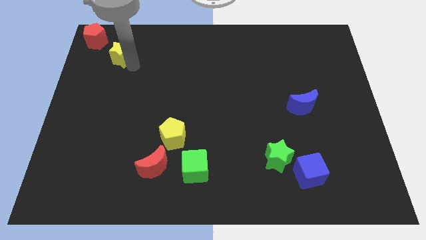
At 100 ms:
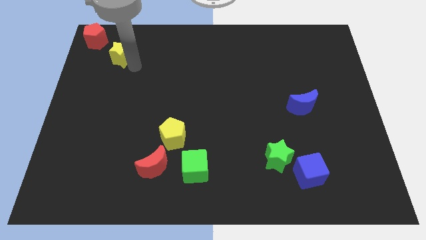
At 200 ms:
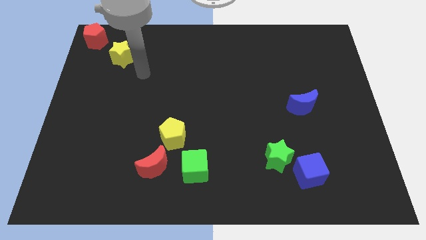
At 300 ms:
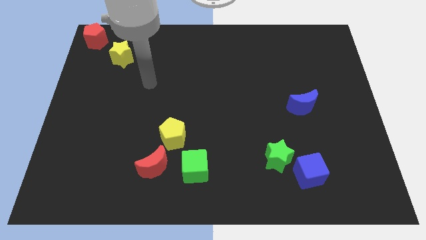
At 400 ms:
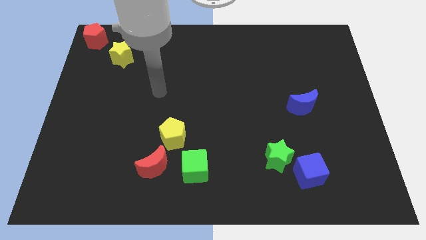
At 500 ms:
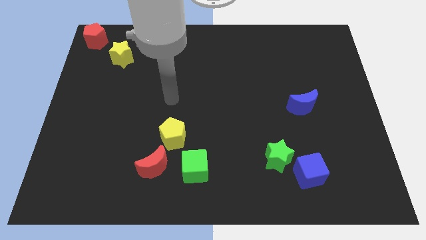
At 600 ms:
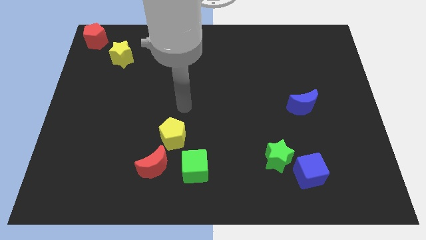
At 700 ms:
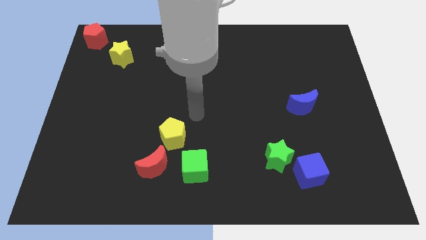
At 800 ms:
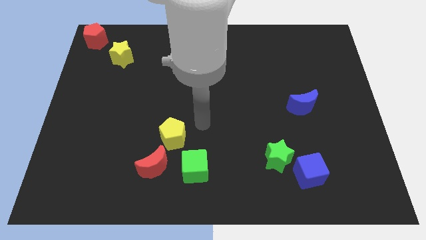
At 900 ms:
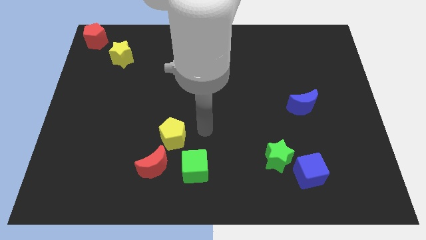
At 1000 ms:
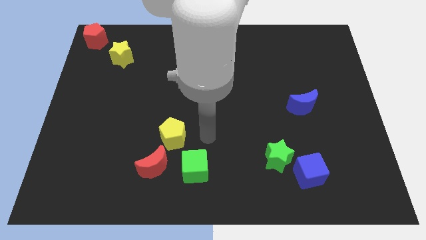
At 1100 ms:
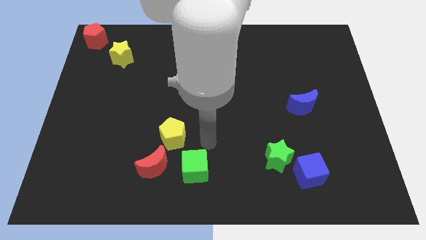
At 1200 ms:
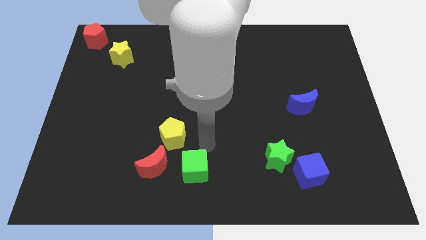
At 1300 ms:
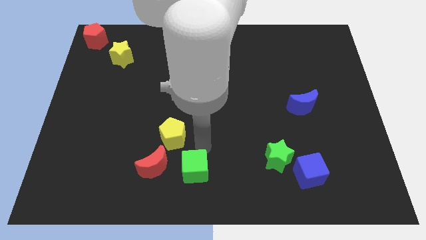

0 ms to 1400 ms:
move the arm away from the yellow star

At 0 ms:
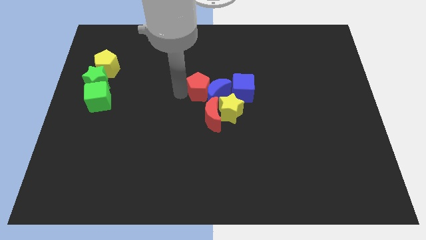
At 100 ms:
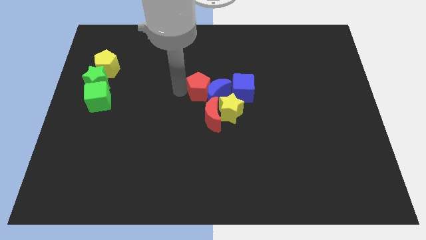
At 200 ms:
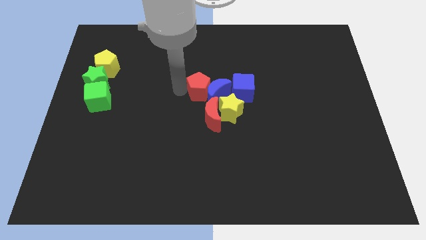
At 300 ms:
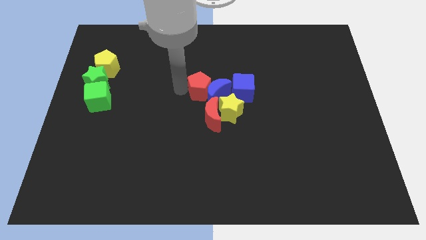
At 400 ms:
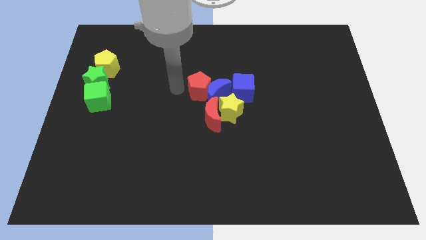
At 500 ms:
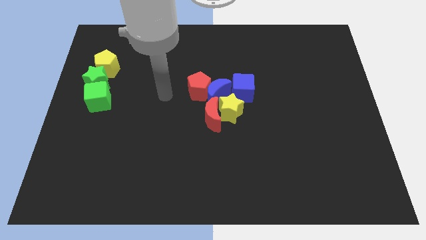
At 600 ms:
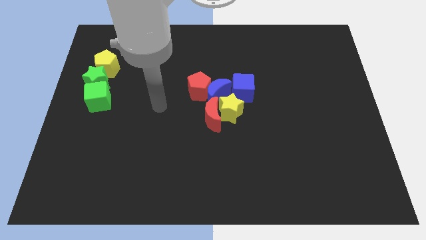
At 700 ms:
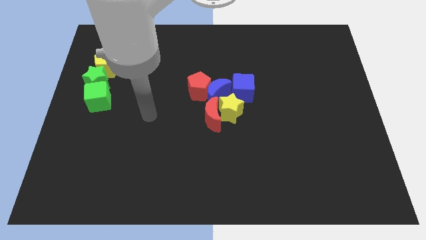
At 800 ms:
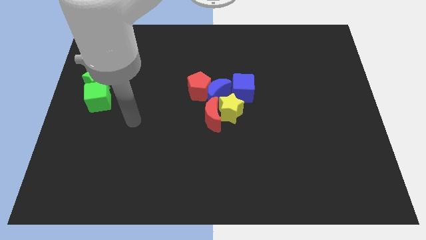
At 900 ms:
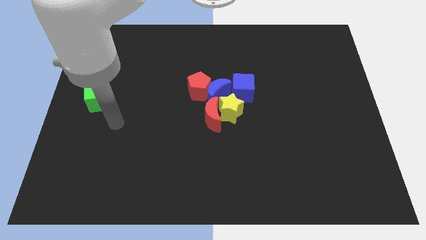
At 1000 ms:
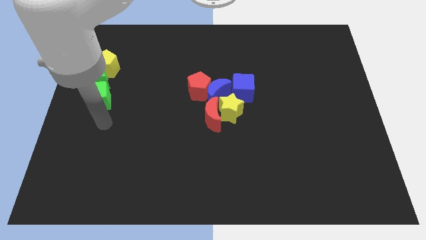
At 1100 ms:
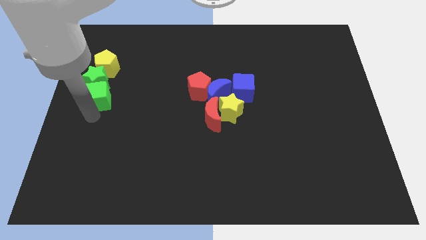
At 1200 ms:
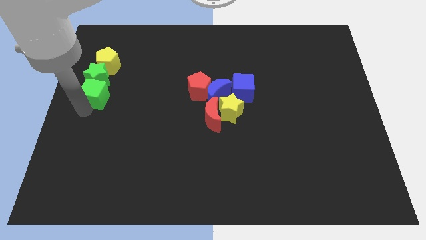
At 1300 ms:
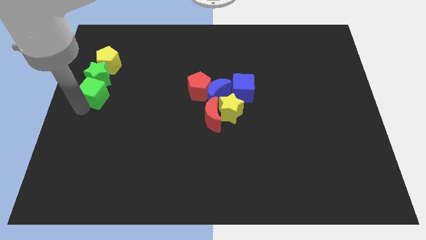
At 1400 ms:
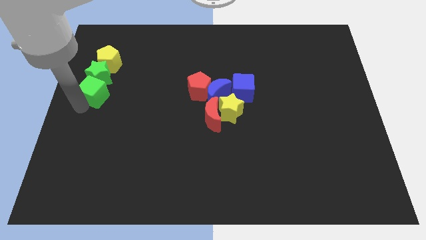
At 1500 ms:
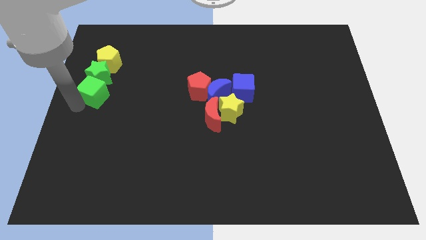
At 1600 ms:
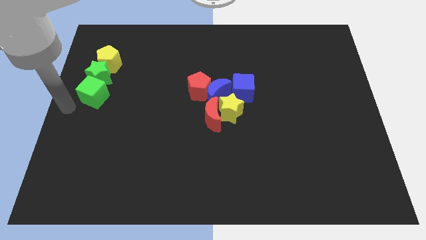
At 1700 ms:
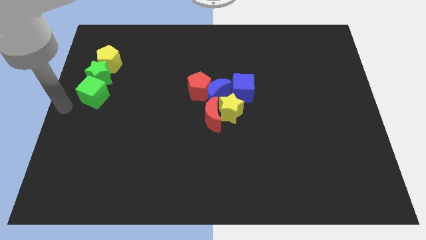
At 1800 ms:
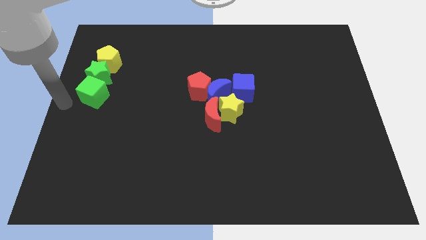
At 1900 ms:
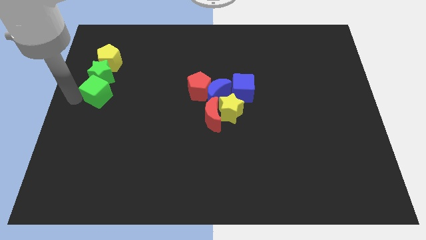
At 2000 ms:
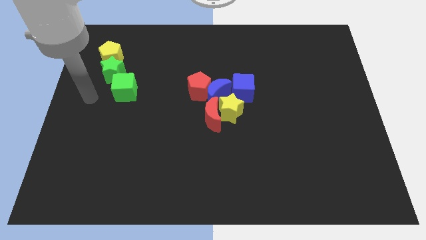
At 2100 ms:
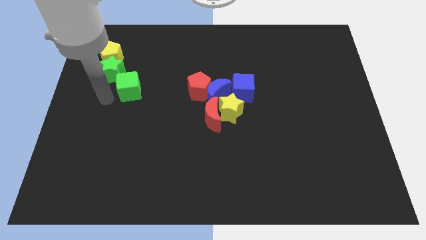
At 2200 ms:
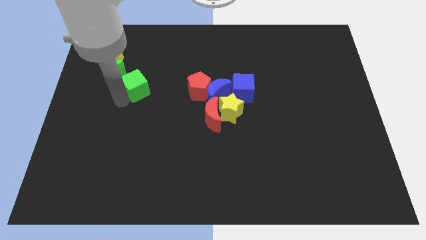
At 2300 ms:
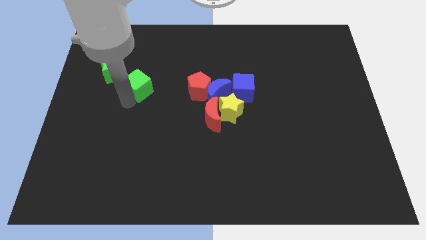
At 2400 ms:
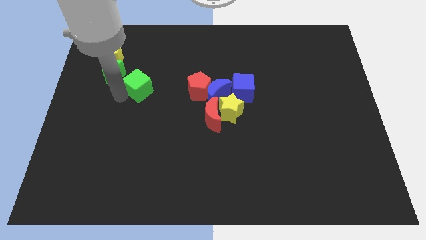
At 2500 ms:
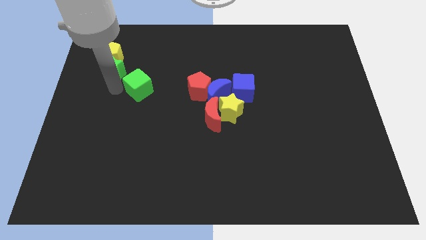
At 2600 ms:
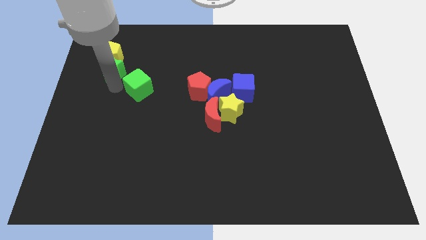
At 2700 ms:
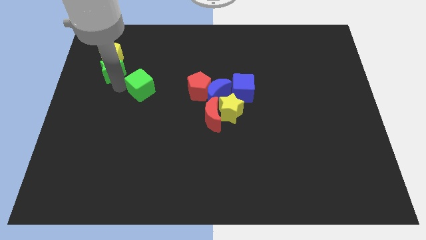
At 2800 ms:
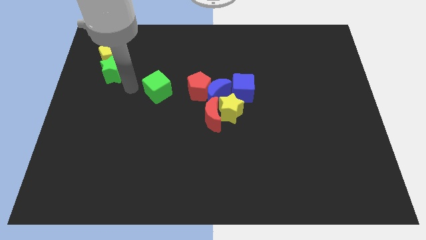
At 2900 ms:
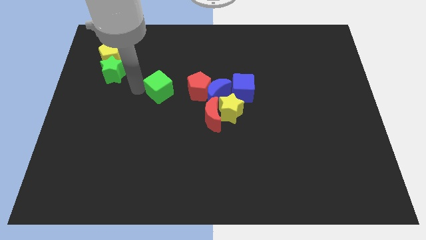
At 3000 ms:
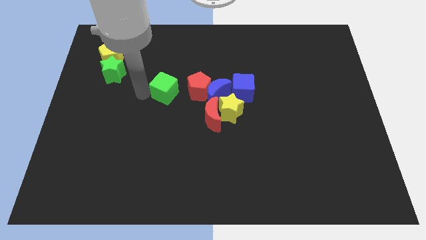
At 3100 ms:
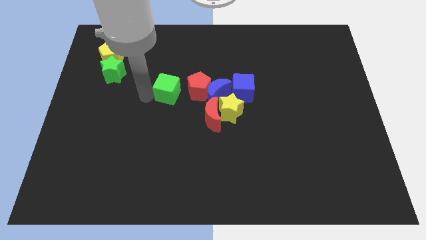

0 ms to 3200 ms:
drag the green cube towards the red pentagon

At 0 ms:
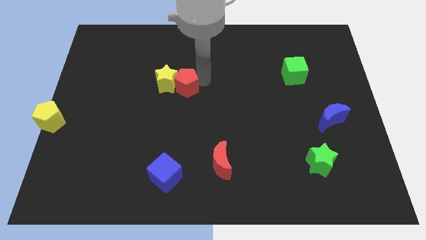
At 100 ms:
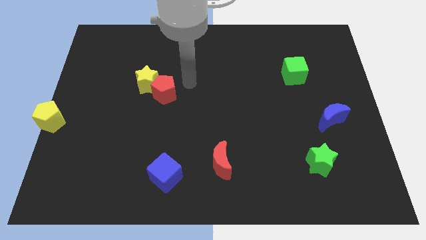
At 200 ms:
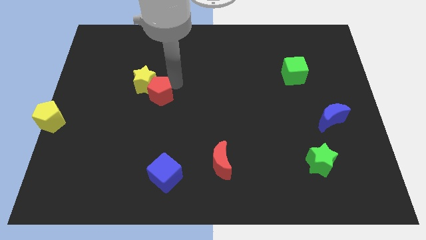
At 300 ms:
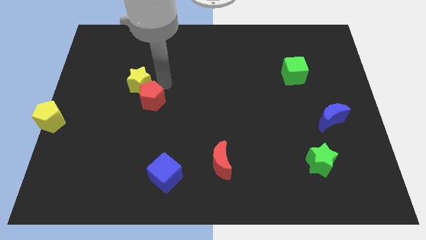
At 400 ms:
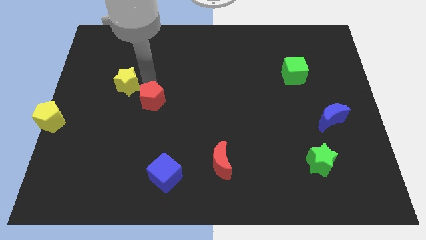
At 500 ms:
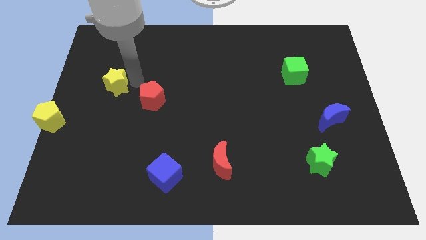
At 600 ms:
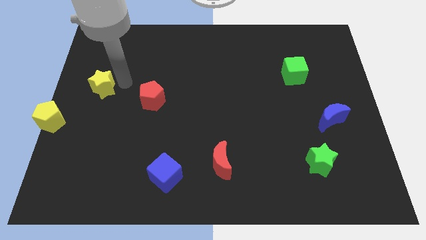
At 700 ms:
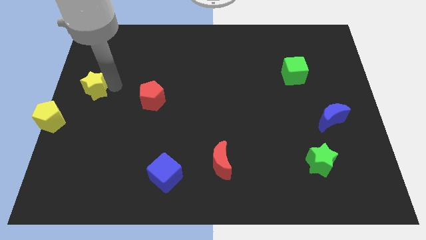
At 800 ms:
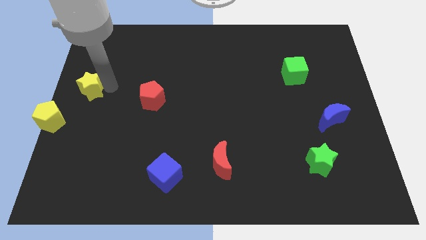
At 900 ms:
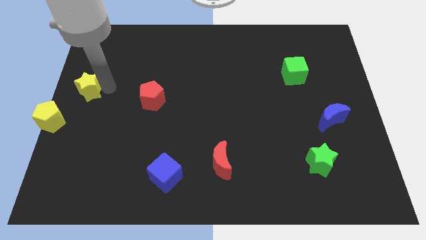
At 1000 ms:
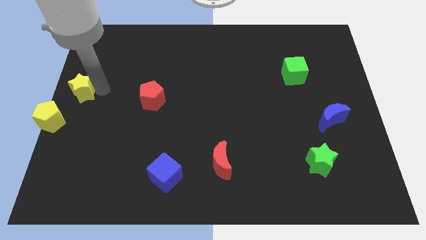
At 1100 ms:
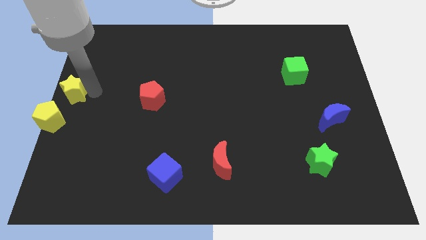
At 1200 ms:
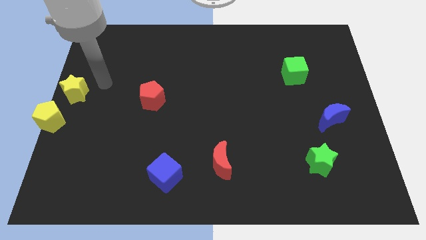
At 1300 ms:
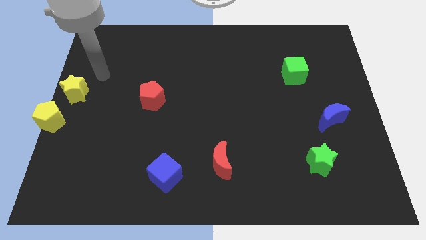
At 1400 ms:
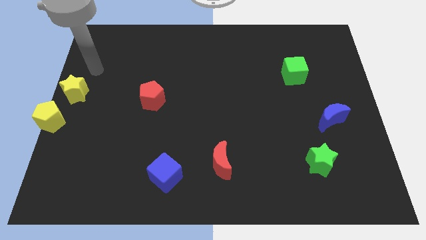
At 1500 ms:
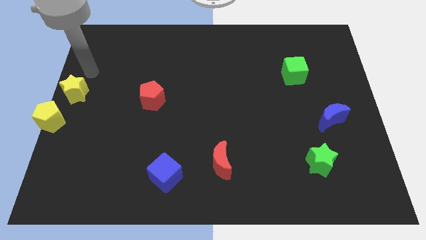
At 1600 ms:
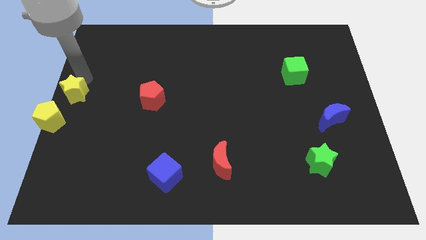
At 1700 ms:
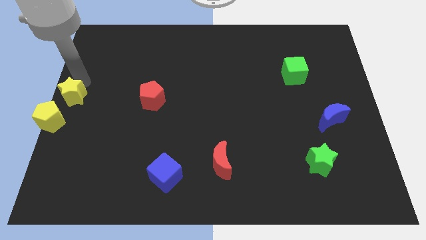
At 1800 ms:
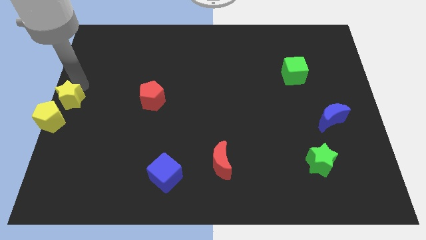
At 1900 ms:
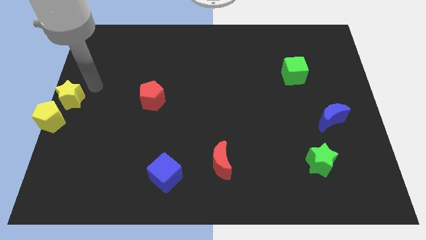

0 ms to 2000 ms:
slide the yellow star towards the yellow pentagon

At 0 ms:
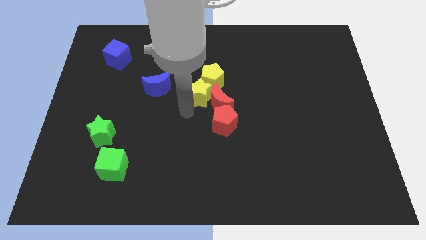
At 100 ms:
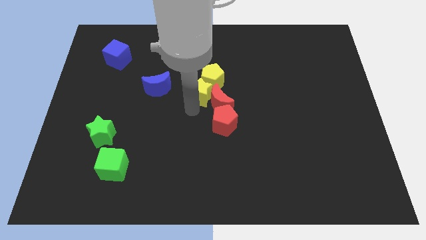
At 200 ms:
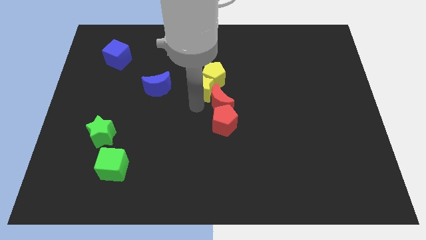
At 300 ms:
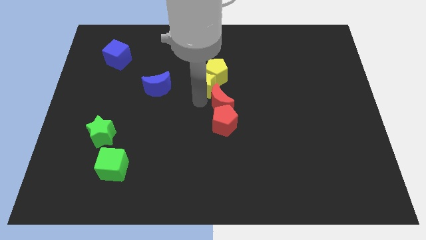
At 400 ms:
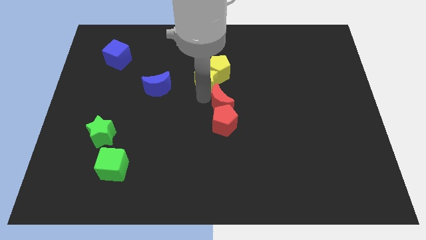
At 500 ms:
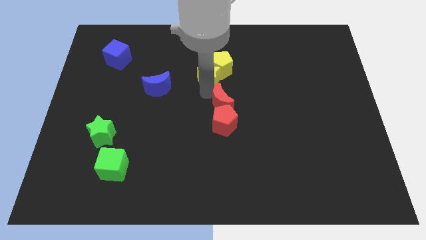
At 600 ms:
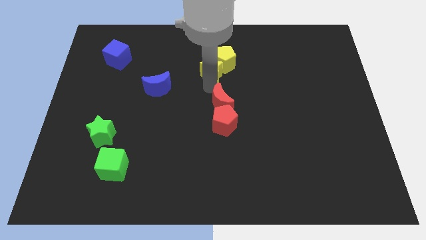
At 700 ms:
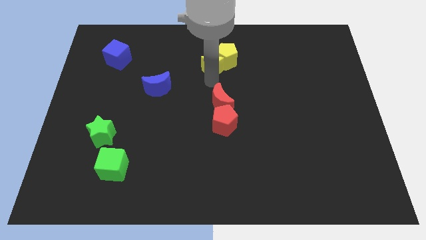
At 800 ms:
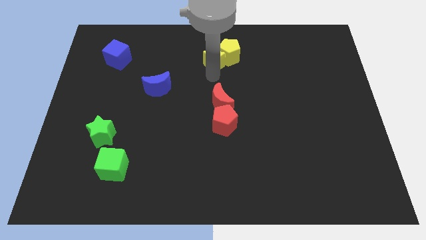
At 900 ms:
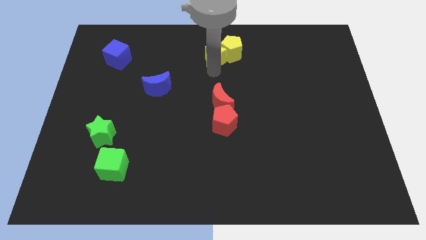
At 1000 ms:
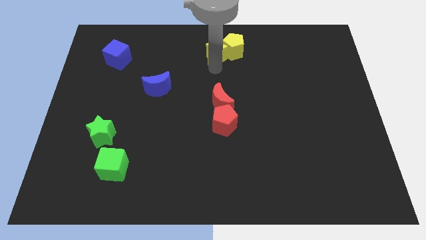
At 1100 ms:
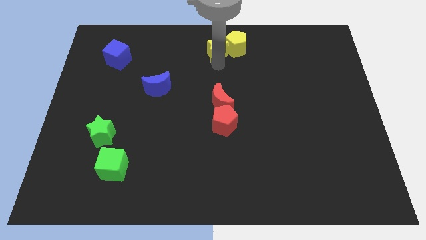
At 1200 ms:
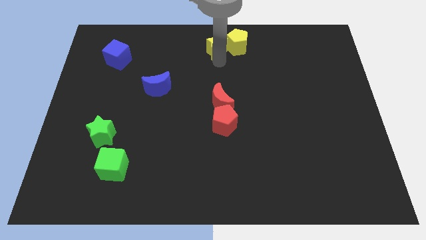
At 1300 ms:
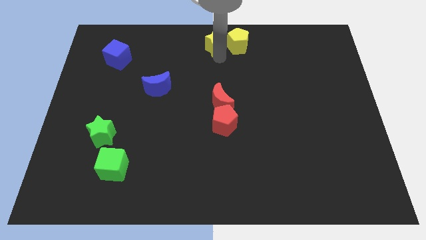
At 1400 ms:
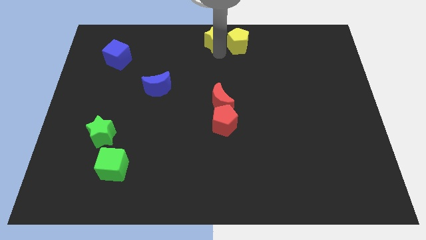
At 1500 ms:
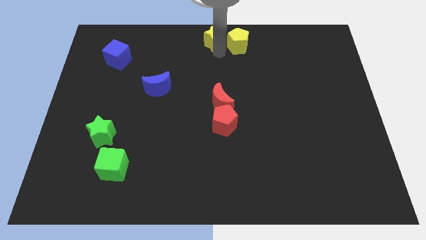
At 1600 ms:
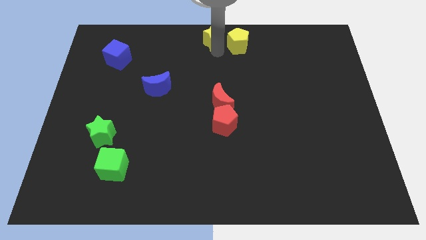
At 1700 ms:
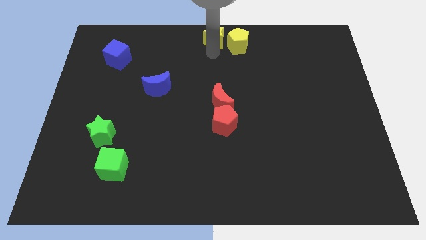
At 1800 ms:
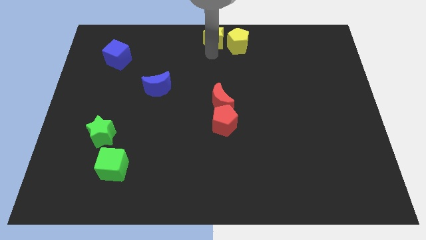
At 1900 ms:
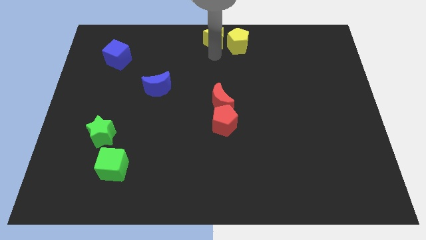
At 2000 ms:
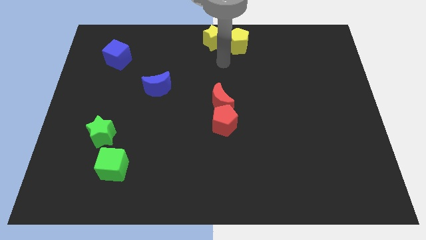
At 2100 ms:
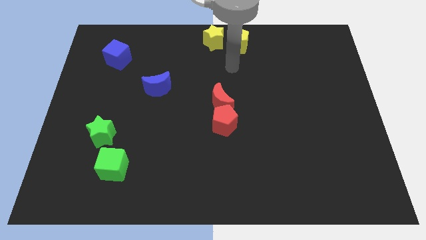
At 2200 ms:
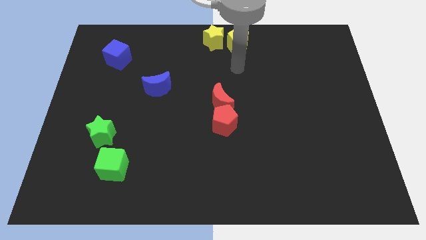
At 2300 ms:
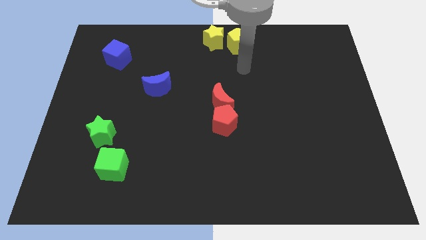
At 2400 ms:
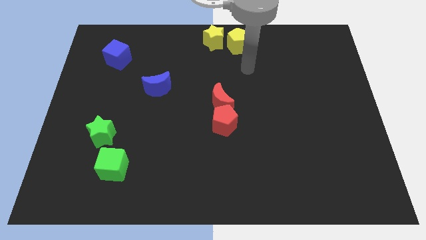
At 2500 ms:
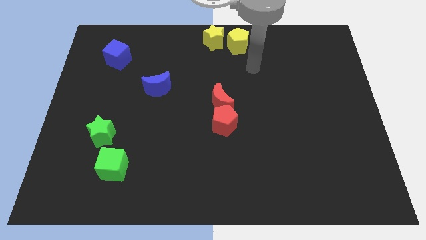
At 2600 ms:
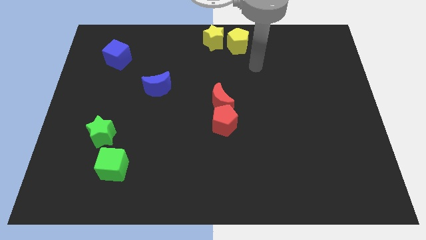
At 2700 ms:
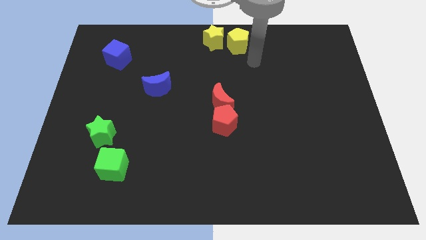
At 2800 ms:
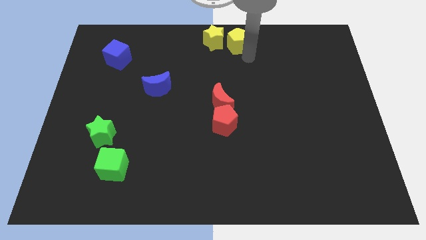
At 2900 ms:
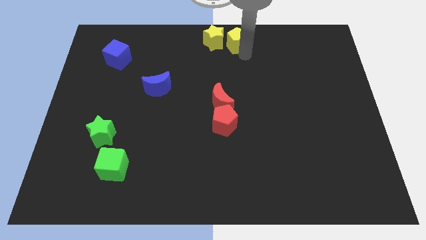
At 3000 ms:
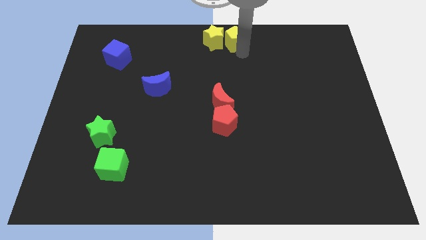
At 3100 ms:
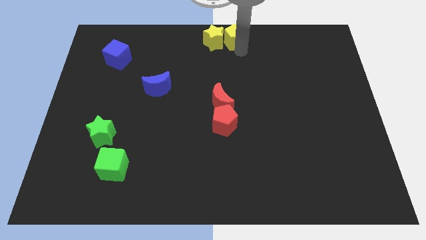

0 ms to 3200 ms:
move the yellow star and yellow pentagon to the top center
